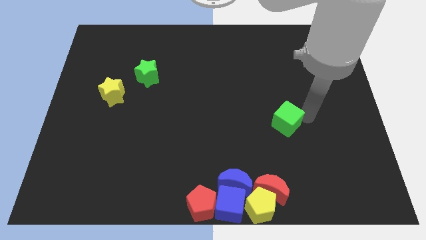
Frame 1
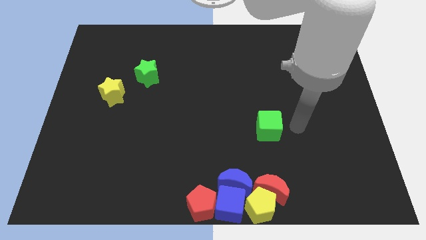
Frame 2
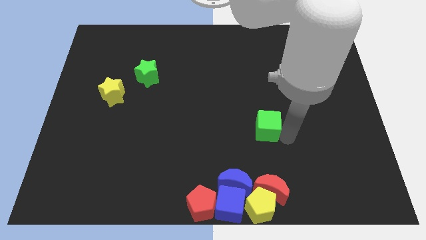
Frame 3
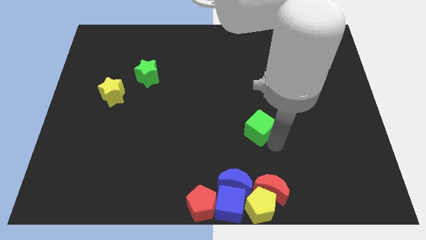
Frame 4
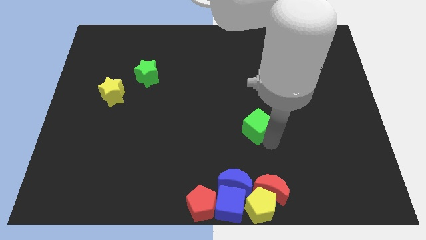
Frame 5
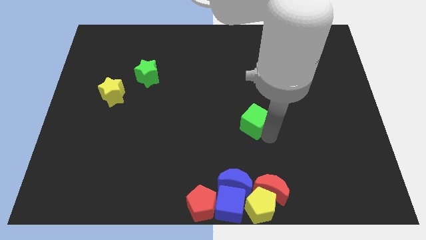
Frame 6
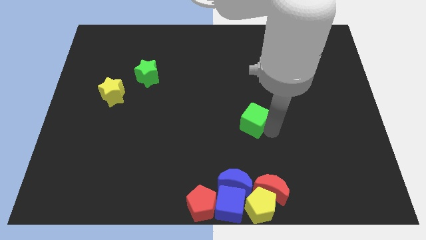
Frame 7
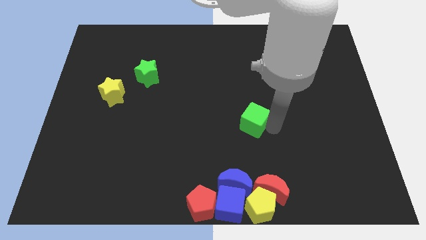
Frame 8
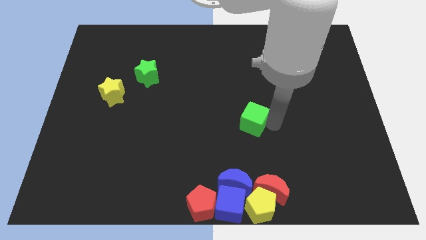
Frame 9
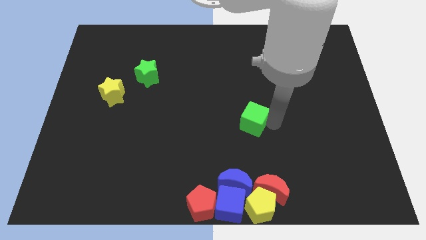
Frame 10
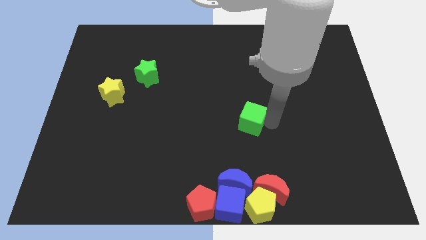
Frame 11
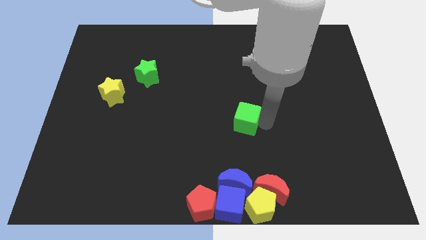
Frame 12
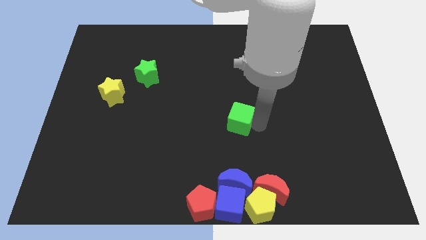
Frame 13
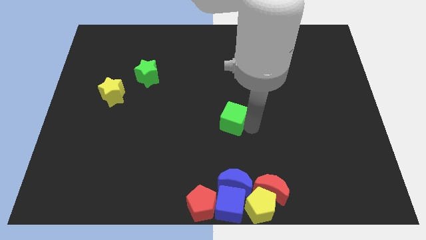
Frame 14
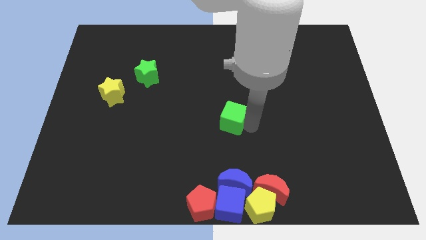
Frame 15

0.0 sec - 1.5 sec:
place the green cube above the blue moon

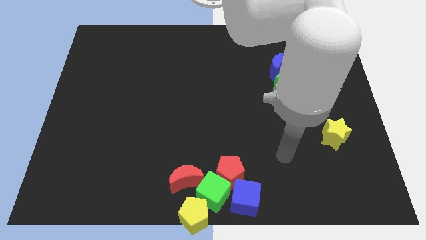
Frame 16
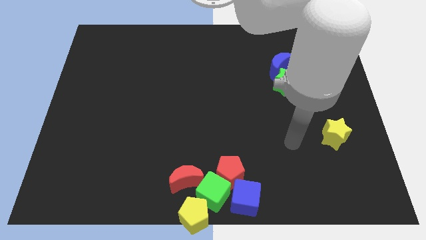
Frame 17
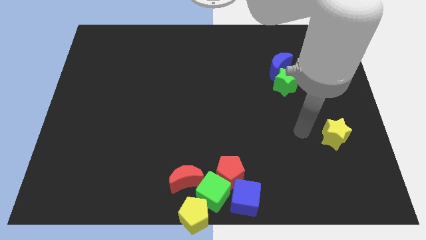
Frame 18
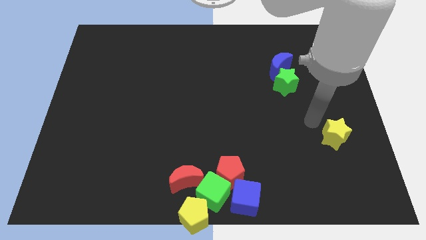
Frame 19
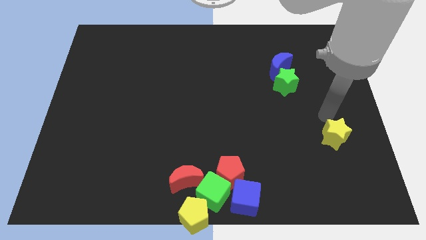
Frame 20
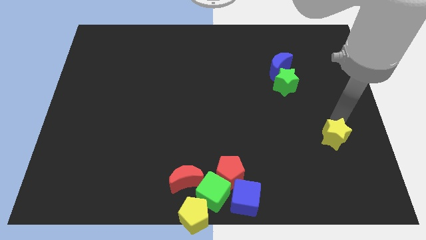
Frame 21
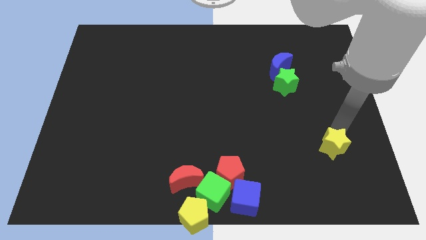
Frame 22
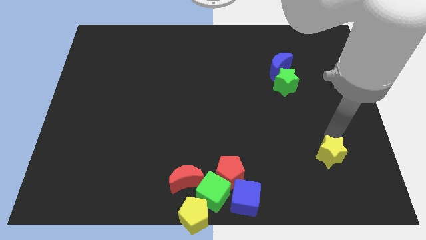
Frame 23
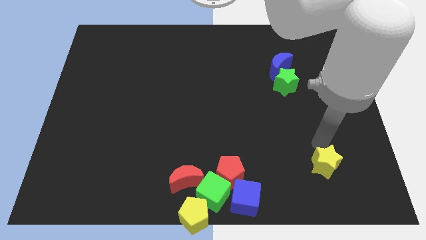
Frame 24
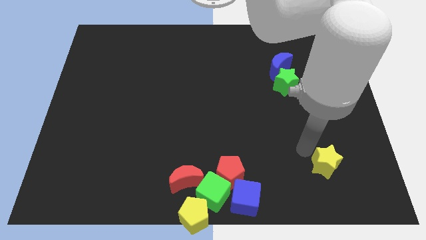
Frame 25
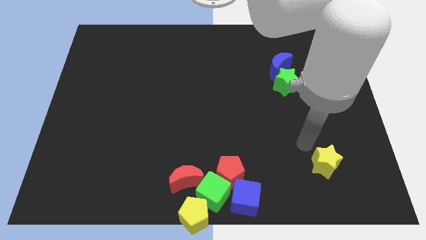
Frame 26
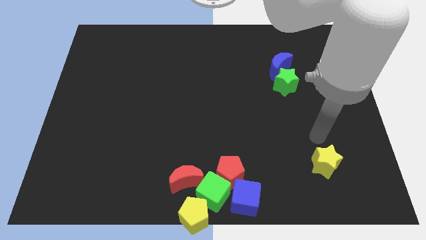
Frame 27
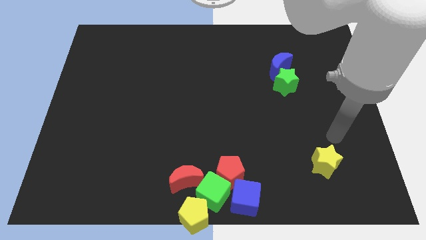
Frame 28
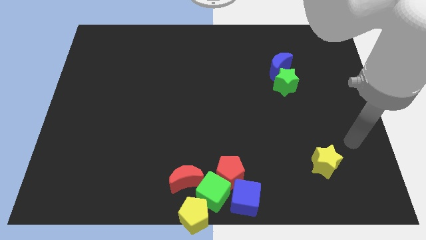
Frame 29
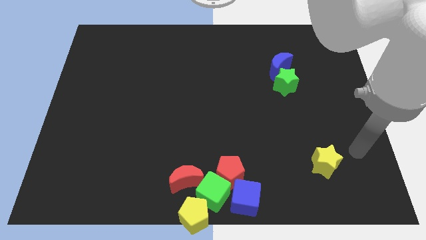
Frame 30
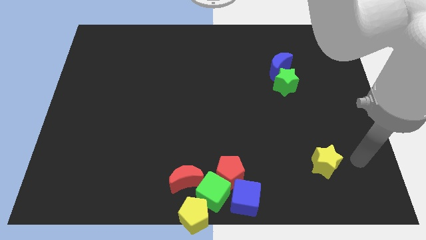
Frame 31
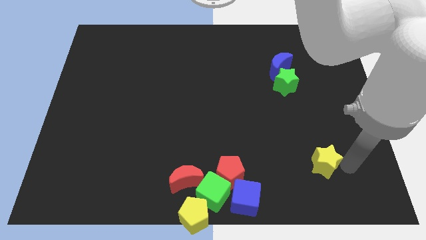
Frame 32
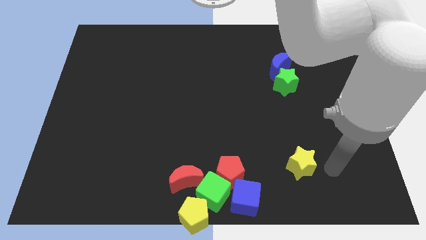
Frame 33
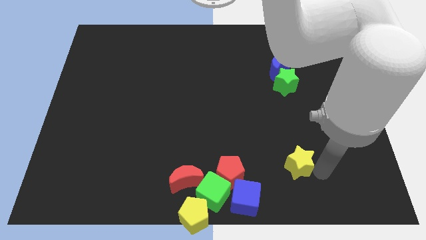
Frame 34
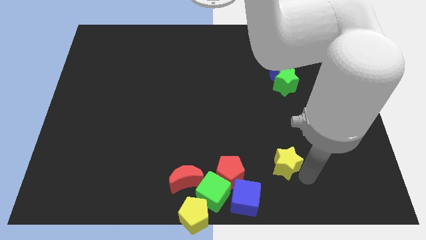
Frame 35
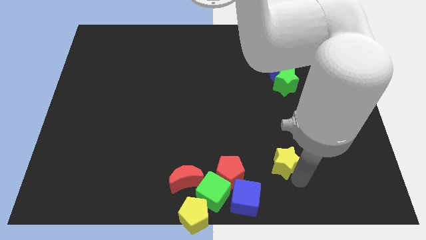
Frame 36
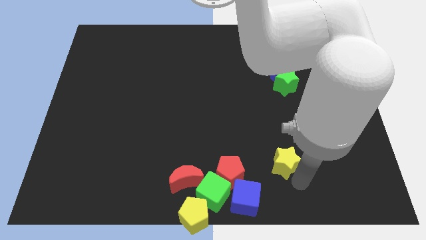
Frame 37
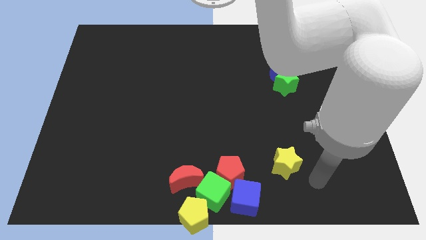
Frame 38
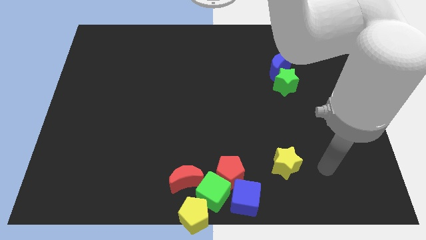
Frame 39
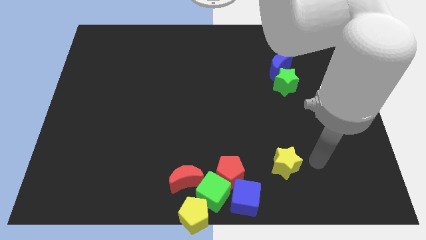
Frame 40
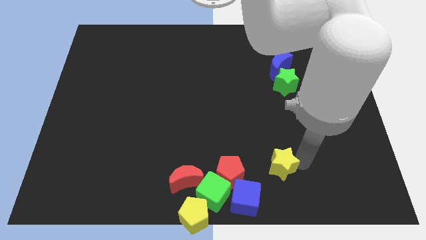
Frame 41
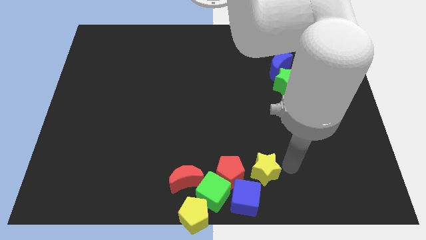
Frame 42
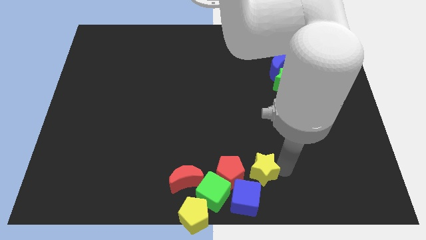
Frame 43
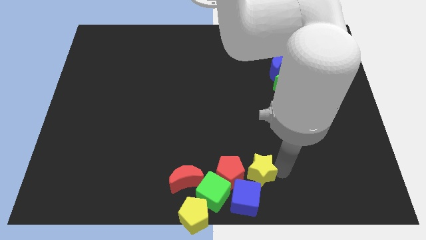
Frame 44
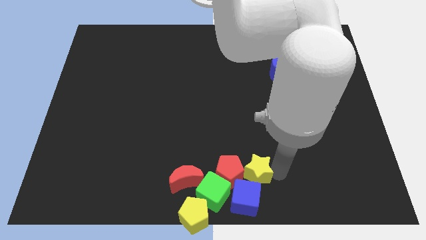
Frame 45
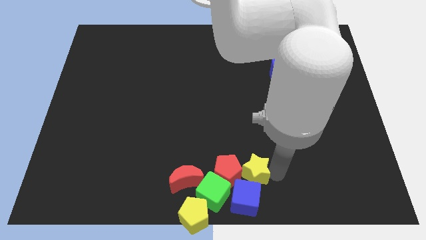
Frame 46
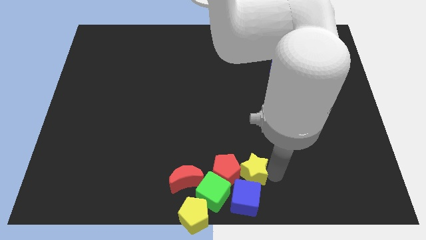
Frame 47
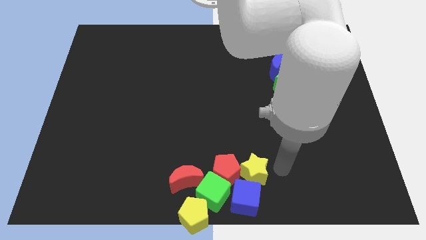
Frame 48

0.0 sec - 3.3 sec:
move the yellow star into the right side of the red pentagon

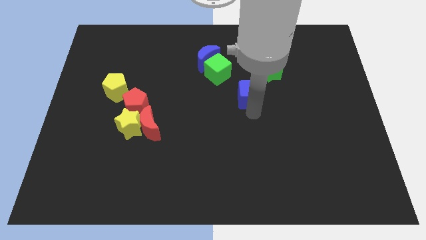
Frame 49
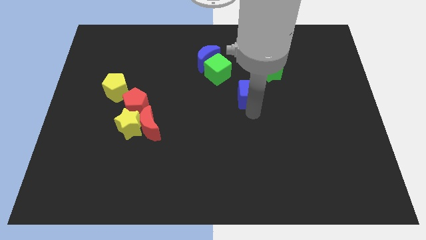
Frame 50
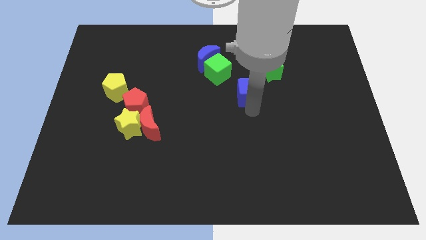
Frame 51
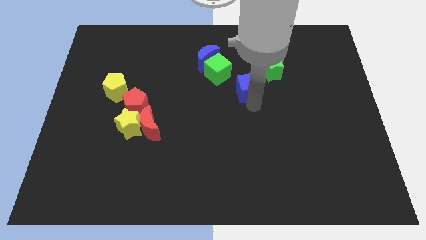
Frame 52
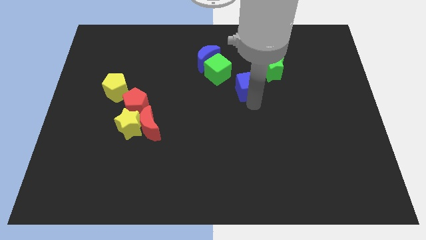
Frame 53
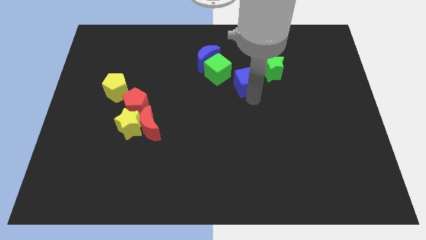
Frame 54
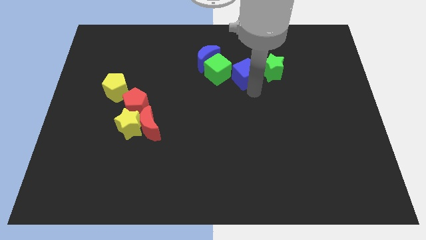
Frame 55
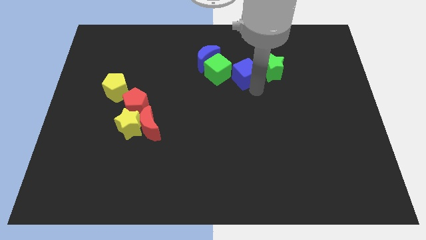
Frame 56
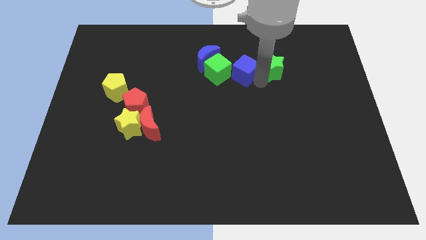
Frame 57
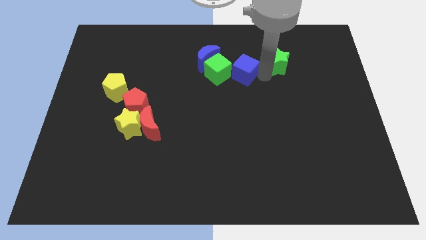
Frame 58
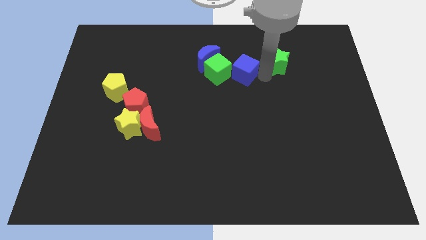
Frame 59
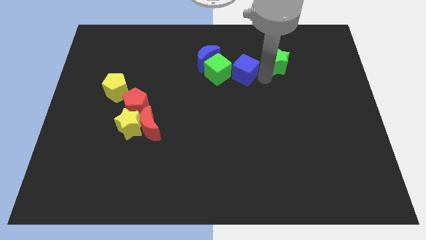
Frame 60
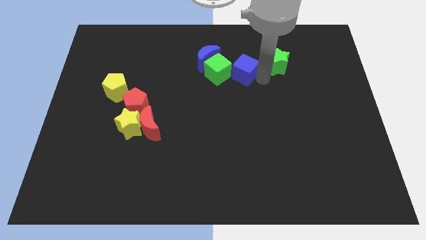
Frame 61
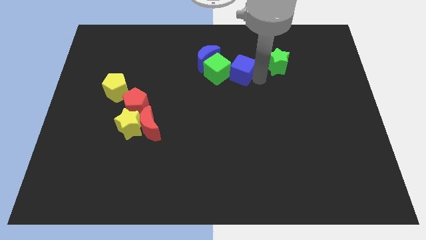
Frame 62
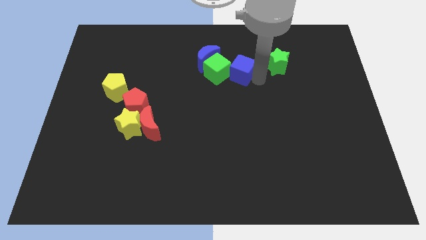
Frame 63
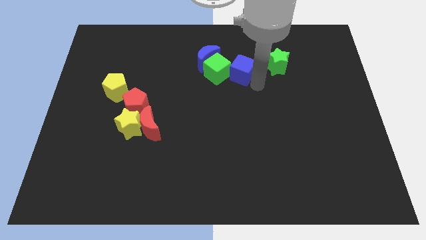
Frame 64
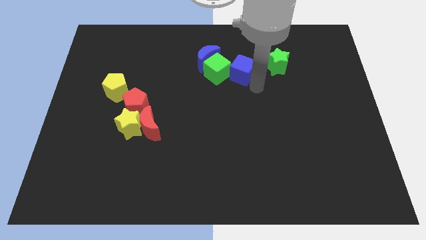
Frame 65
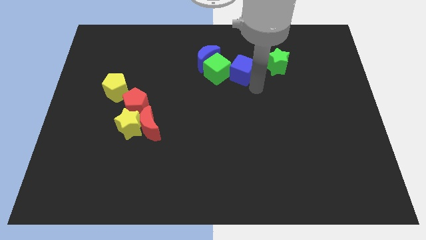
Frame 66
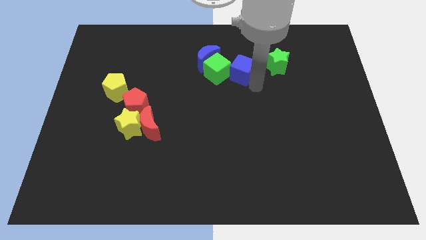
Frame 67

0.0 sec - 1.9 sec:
place the blue cube in between the green star and green cube

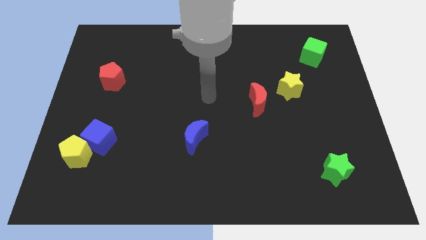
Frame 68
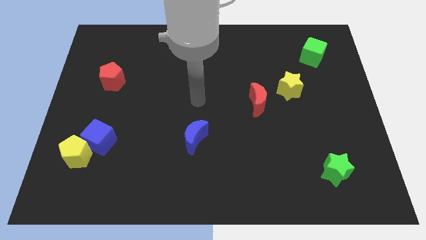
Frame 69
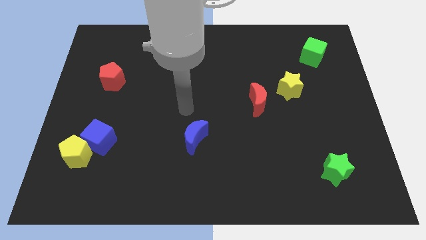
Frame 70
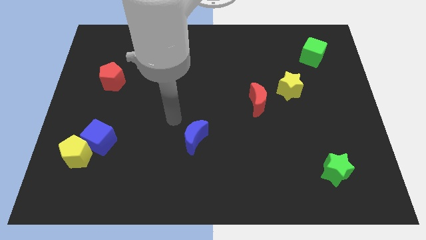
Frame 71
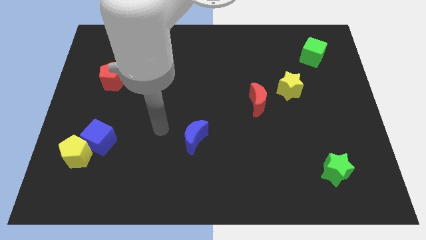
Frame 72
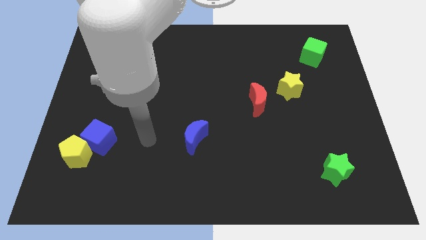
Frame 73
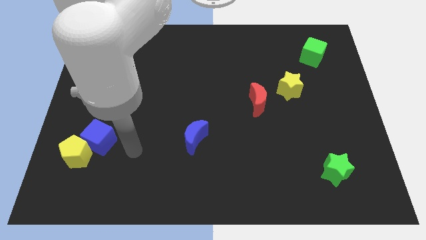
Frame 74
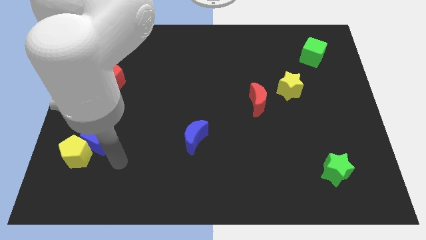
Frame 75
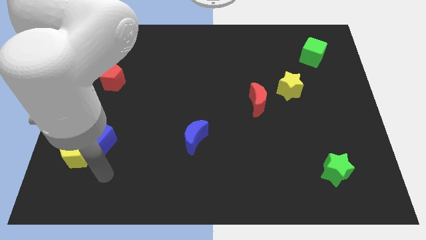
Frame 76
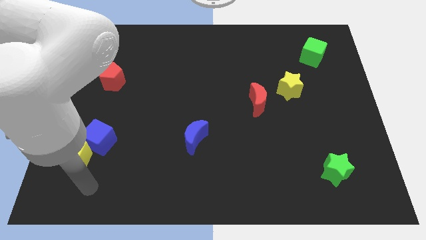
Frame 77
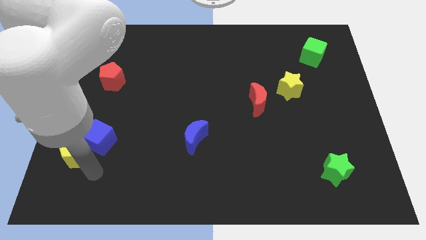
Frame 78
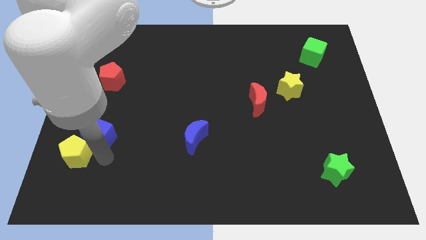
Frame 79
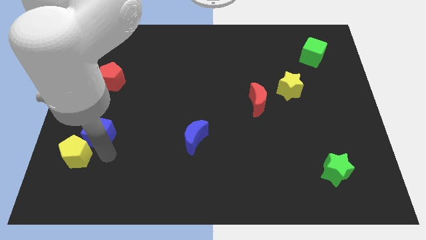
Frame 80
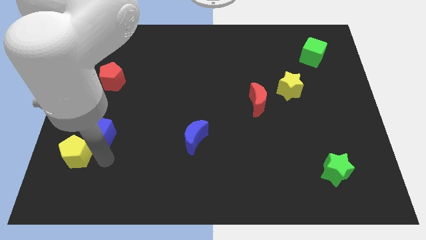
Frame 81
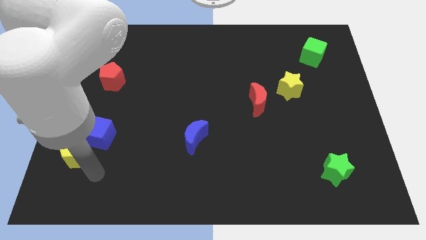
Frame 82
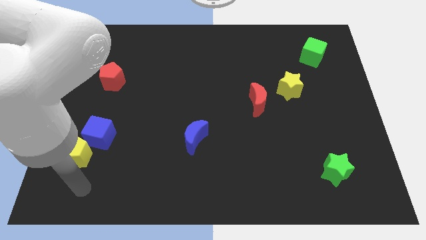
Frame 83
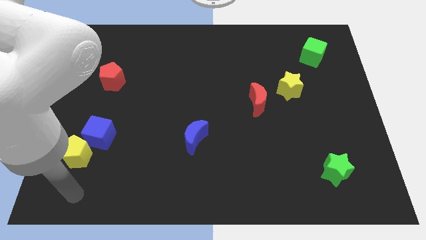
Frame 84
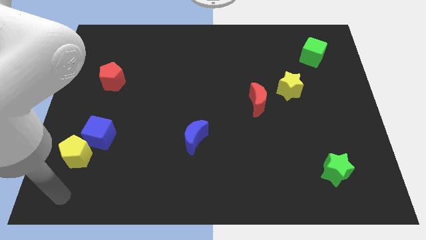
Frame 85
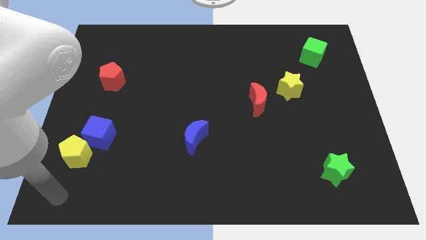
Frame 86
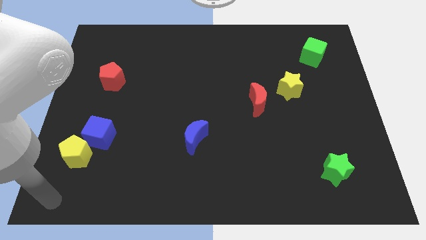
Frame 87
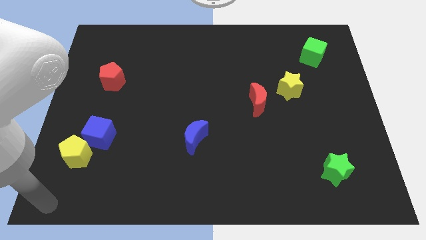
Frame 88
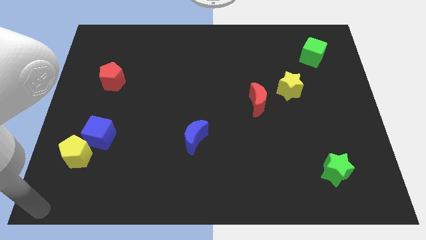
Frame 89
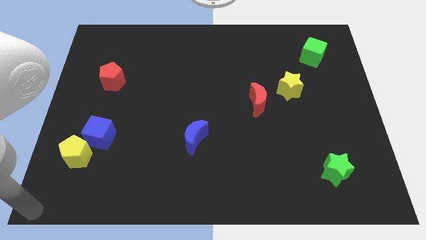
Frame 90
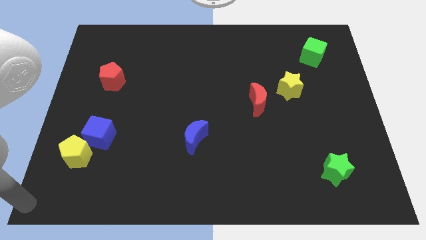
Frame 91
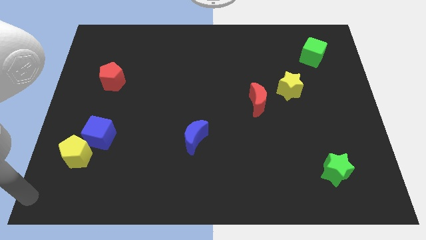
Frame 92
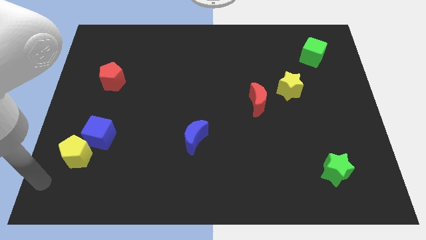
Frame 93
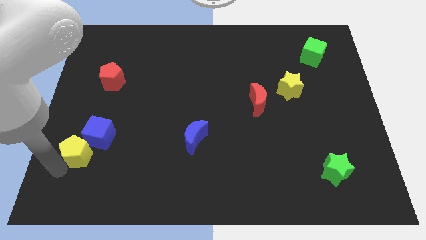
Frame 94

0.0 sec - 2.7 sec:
slightly push the blue cube and move away
